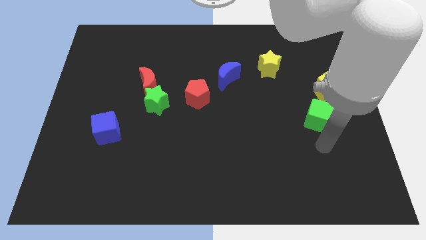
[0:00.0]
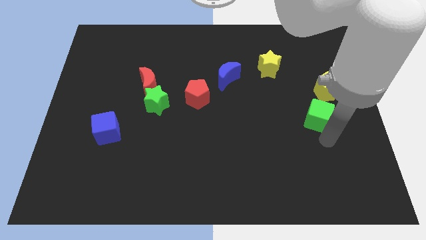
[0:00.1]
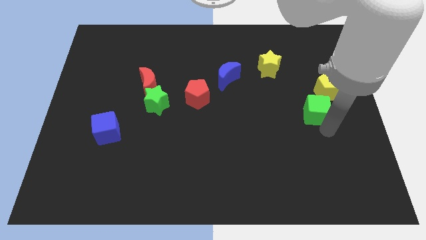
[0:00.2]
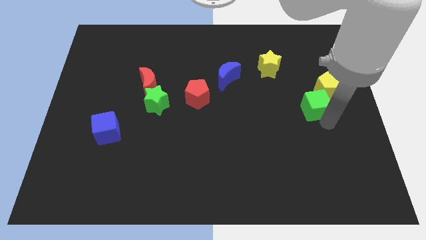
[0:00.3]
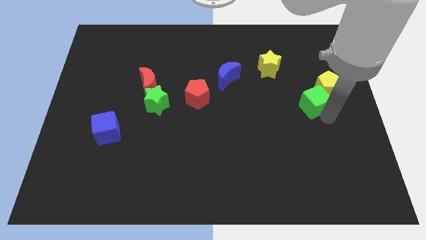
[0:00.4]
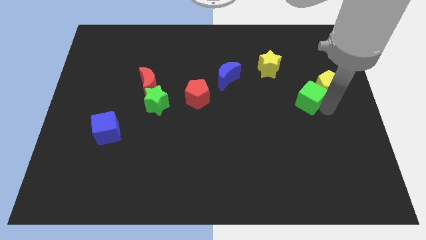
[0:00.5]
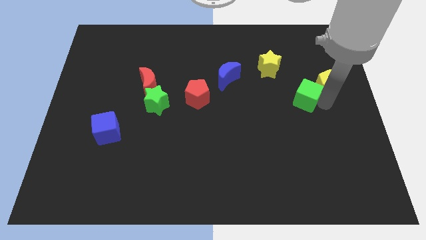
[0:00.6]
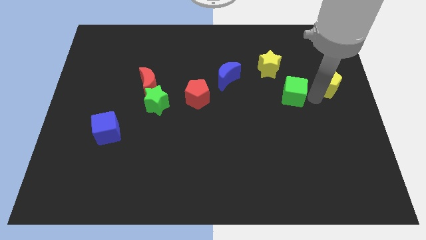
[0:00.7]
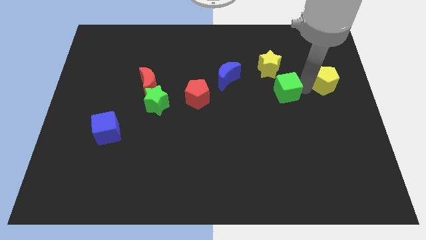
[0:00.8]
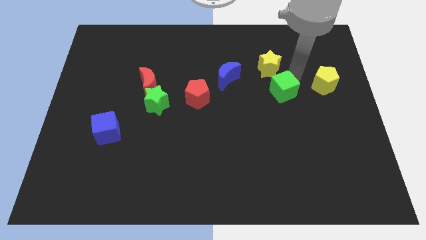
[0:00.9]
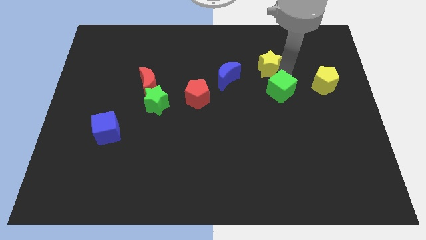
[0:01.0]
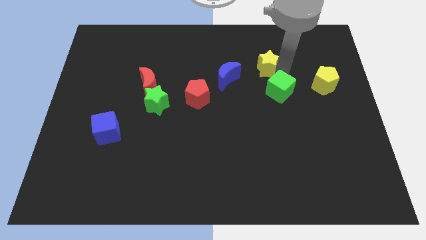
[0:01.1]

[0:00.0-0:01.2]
move the green cube vertically below the yellow star

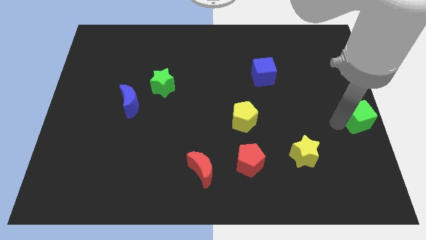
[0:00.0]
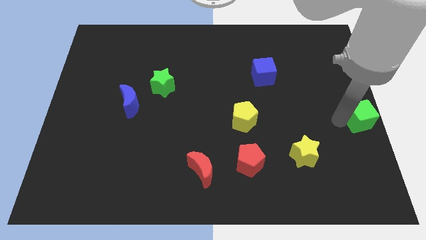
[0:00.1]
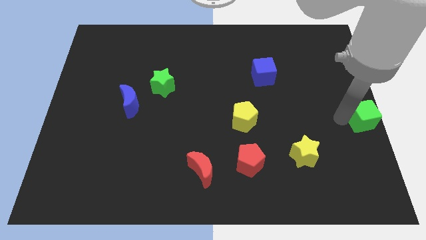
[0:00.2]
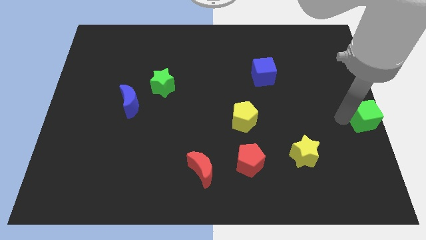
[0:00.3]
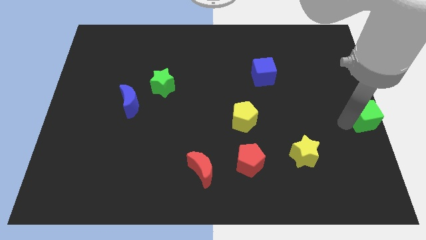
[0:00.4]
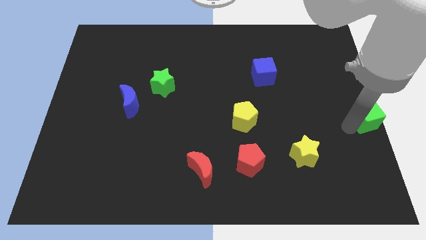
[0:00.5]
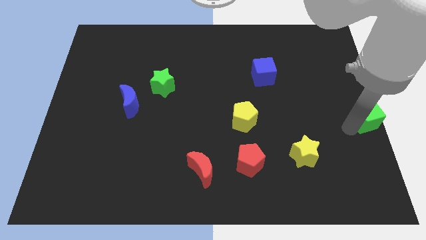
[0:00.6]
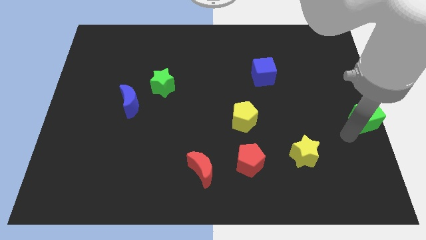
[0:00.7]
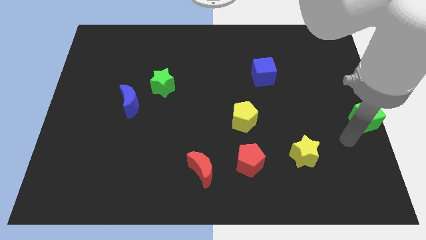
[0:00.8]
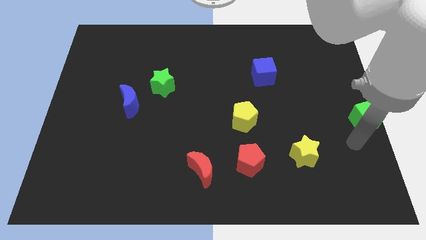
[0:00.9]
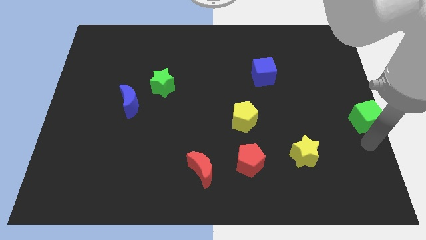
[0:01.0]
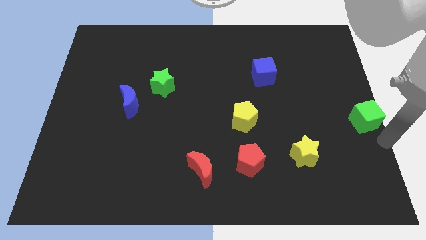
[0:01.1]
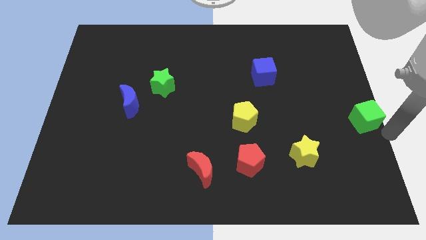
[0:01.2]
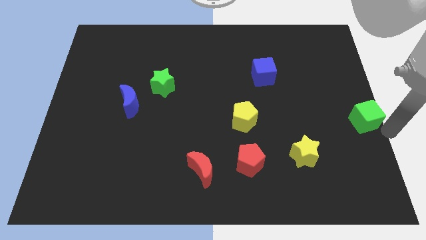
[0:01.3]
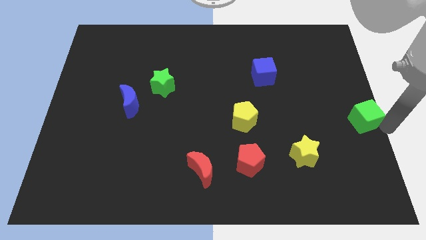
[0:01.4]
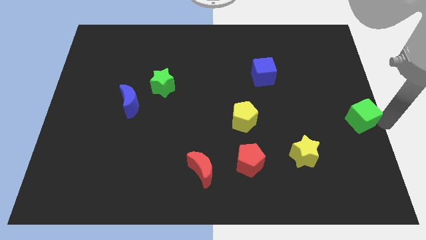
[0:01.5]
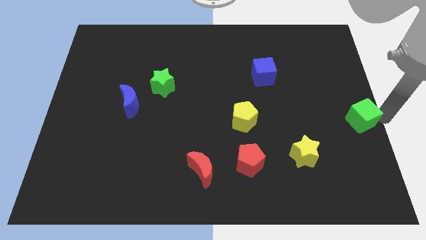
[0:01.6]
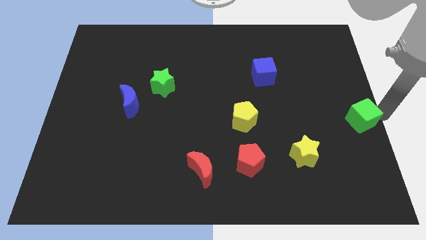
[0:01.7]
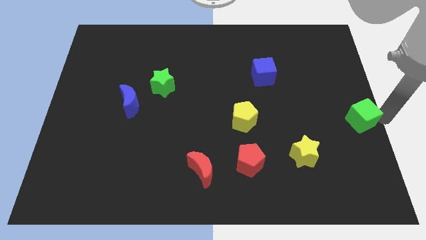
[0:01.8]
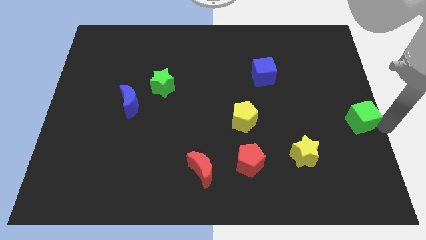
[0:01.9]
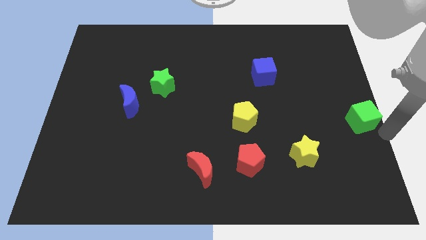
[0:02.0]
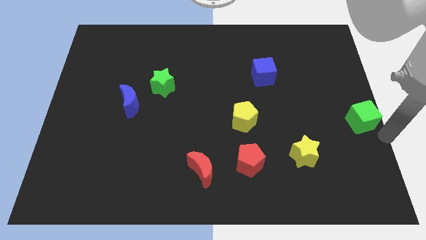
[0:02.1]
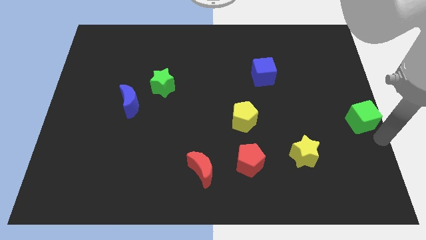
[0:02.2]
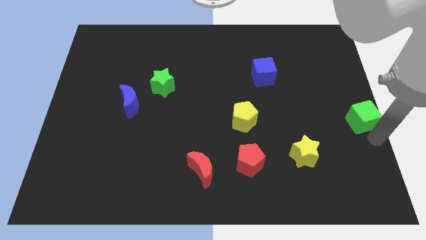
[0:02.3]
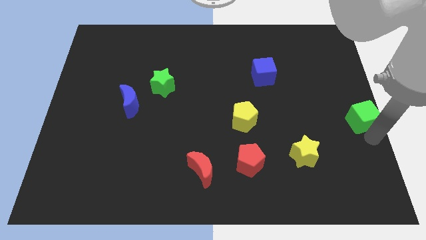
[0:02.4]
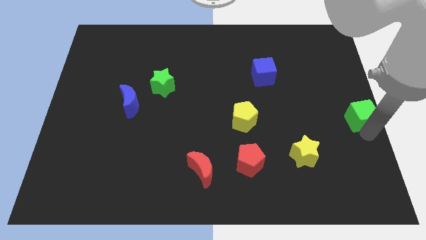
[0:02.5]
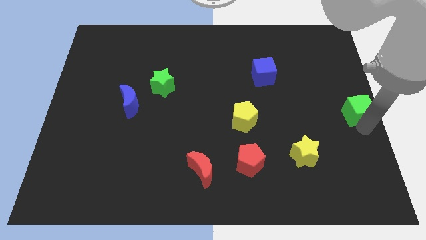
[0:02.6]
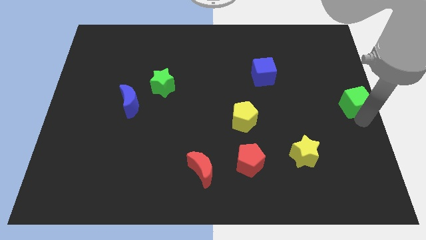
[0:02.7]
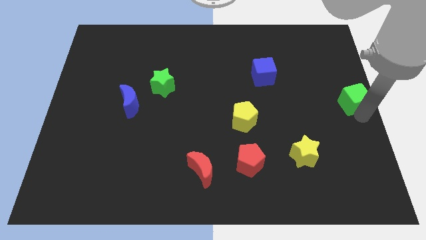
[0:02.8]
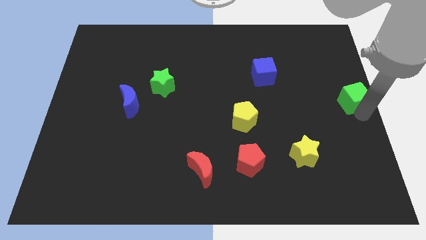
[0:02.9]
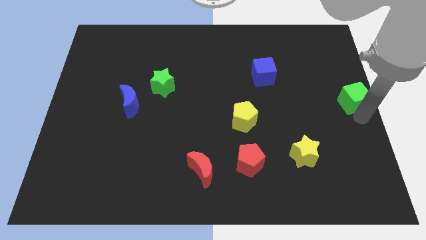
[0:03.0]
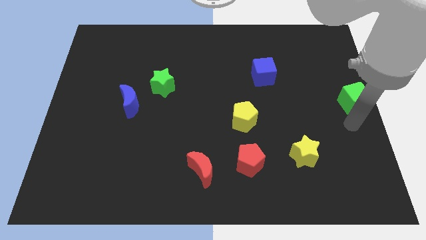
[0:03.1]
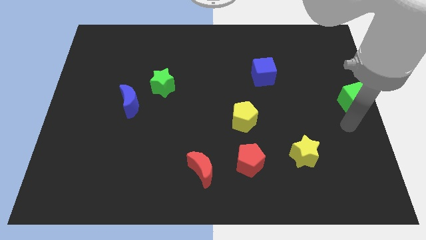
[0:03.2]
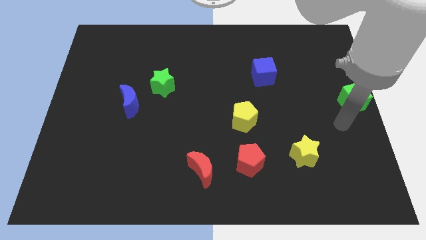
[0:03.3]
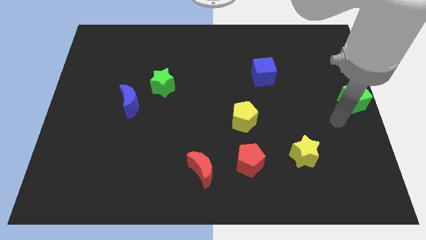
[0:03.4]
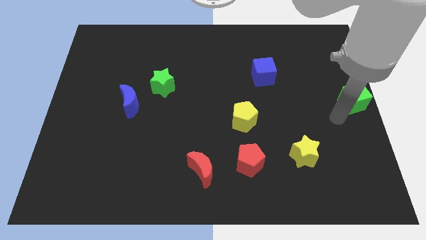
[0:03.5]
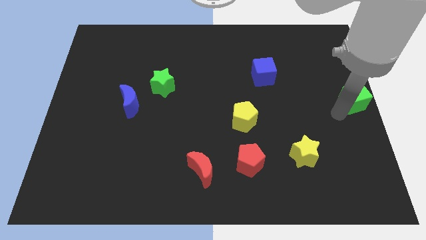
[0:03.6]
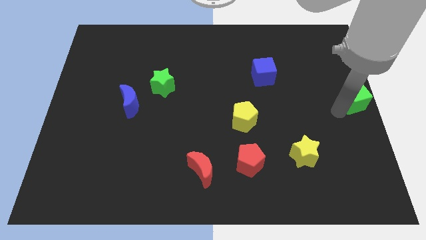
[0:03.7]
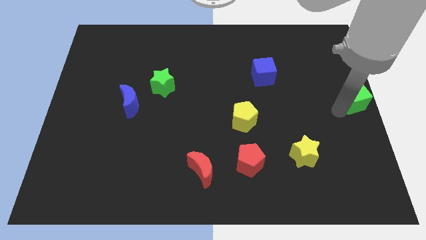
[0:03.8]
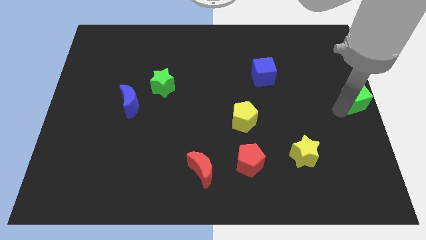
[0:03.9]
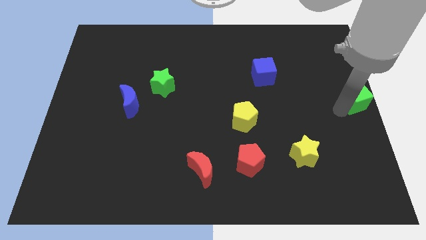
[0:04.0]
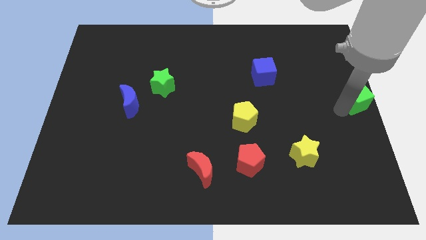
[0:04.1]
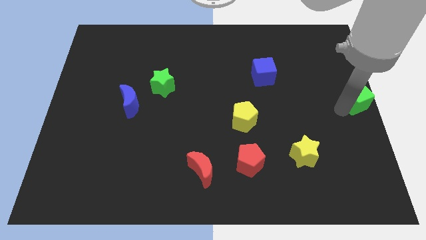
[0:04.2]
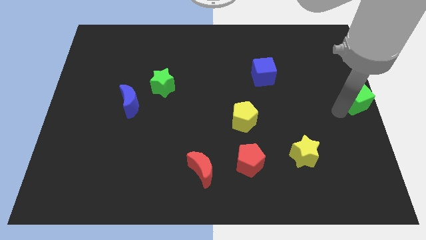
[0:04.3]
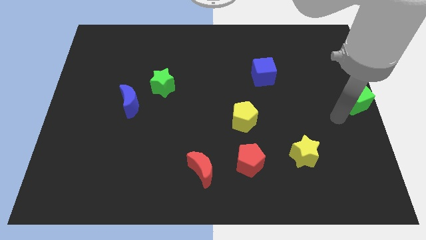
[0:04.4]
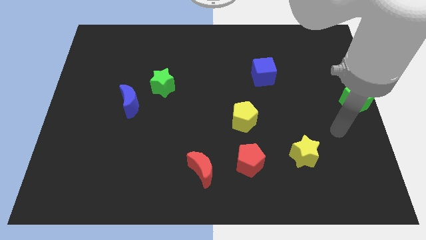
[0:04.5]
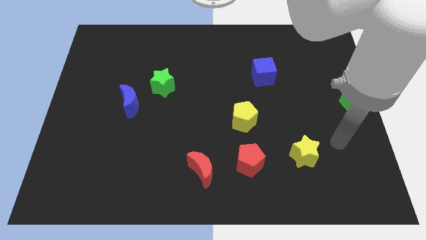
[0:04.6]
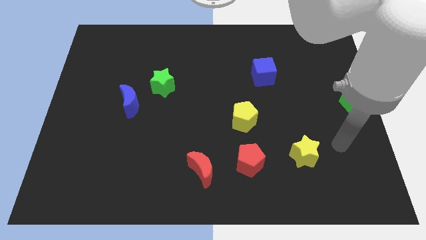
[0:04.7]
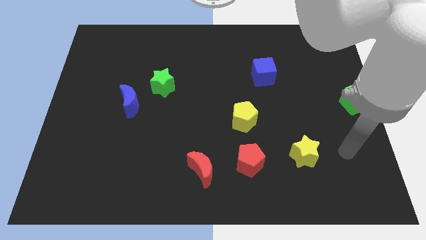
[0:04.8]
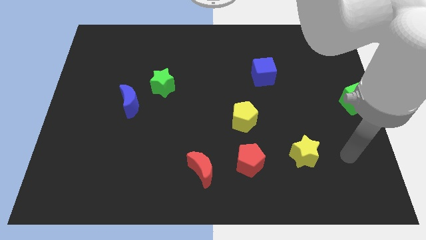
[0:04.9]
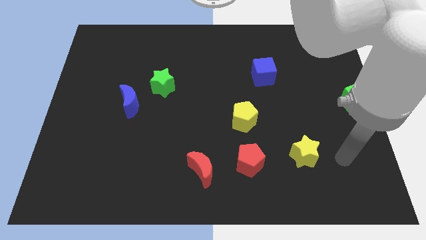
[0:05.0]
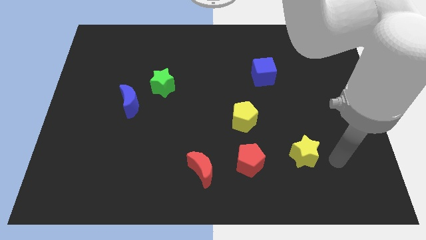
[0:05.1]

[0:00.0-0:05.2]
move the green cube diagonally to the bottom right of the blue moon

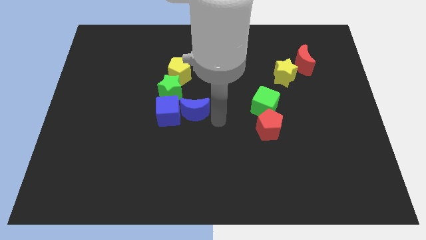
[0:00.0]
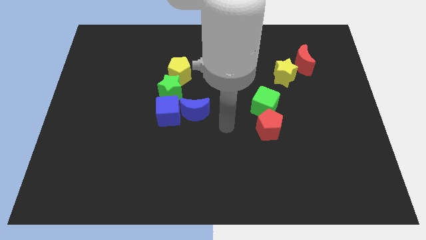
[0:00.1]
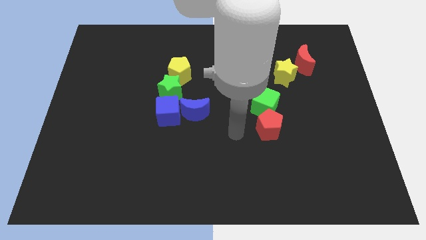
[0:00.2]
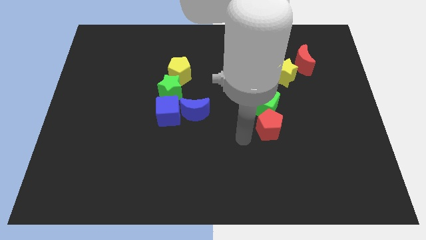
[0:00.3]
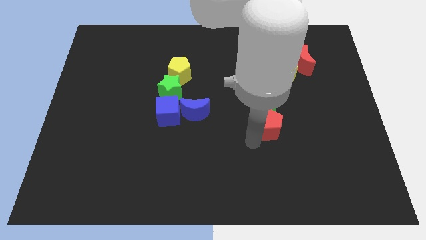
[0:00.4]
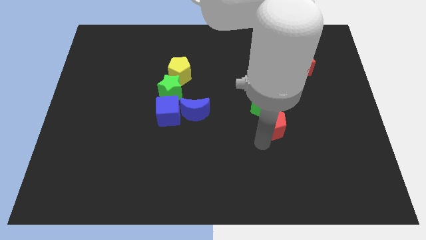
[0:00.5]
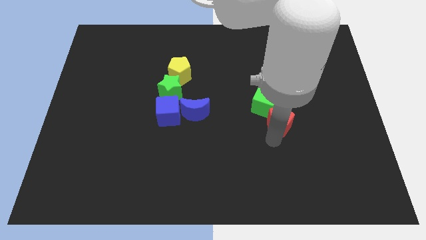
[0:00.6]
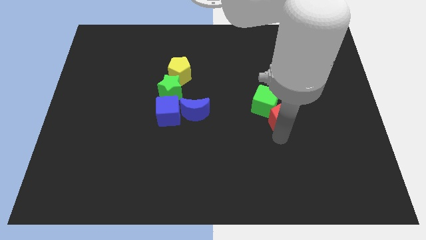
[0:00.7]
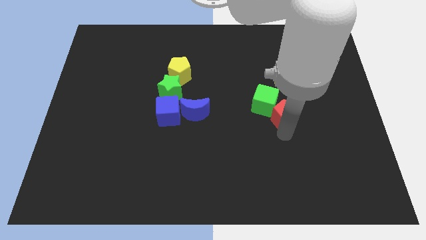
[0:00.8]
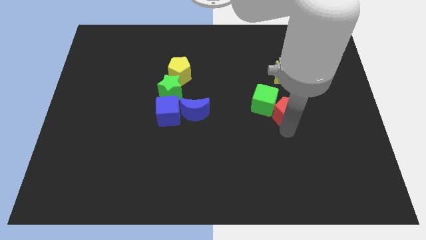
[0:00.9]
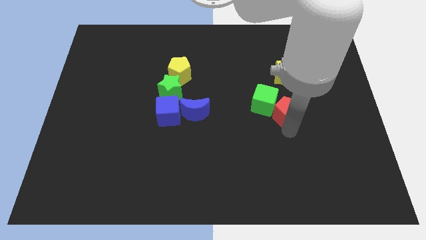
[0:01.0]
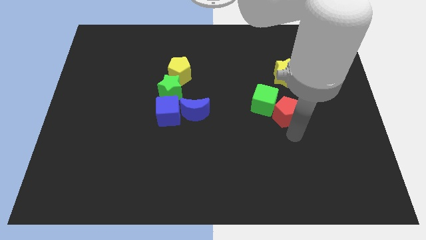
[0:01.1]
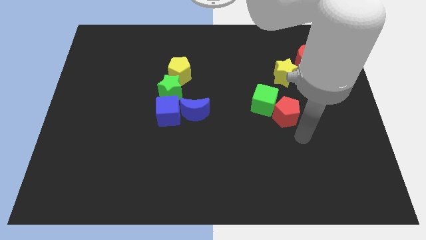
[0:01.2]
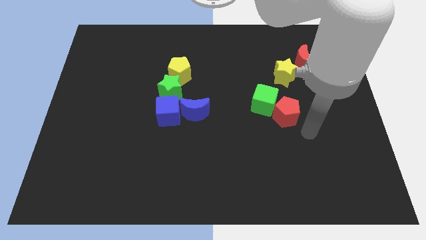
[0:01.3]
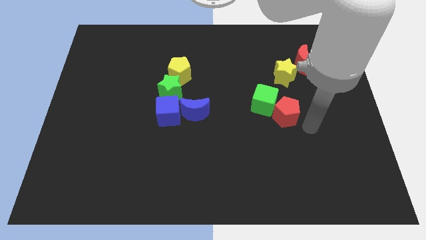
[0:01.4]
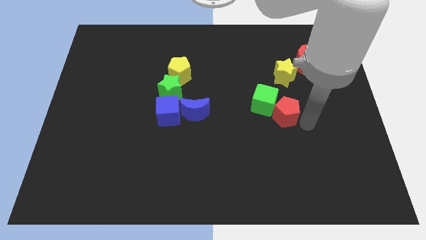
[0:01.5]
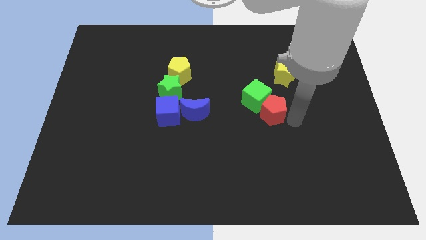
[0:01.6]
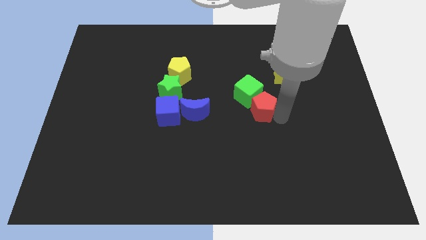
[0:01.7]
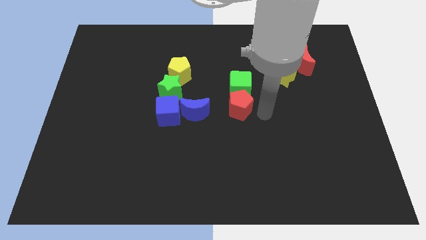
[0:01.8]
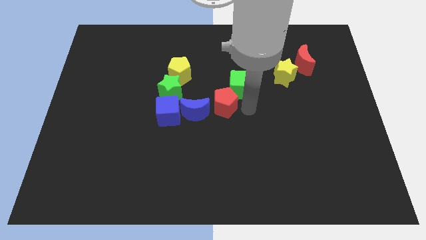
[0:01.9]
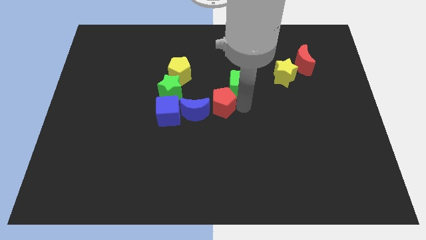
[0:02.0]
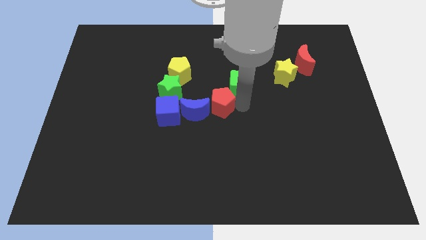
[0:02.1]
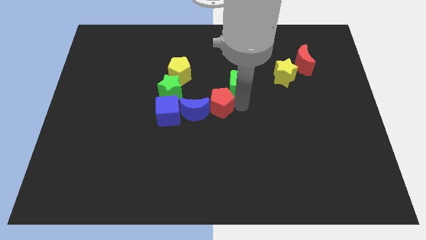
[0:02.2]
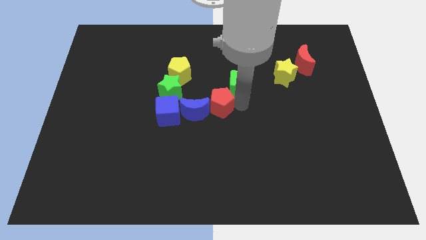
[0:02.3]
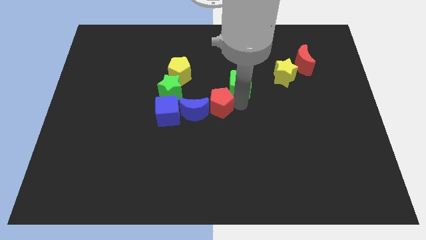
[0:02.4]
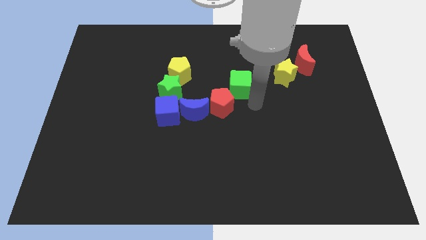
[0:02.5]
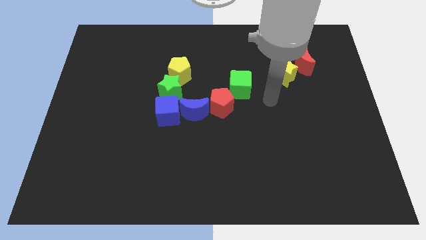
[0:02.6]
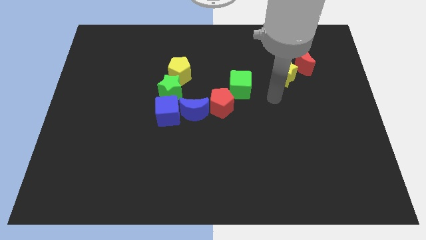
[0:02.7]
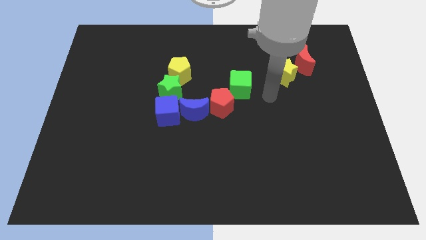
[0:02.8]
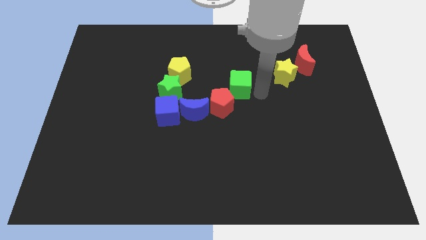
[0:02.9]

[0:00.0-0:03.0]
move the red pentagon to the right of the blue moon
